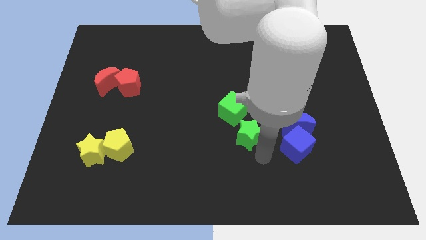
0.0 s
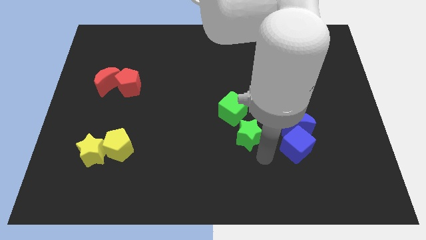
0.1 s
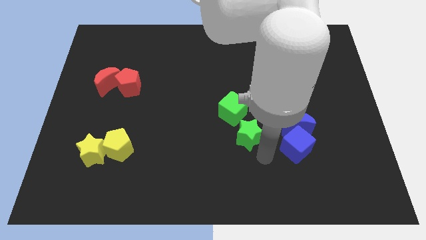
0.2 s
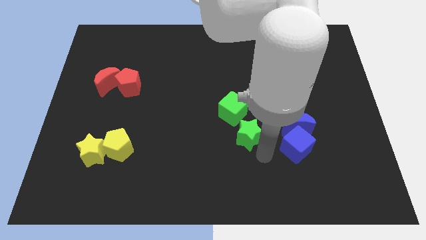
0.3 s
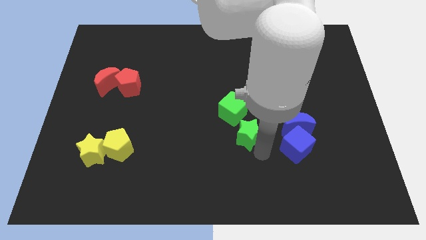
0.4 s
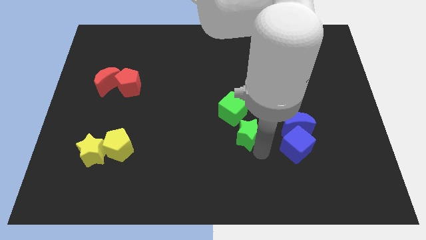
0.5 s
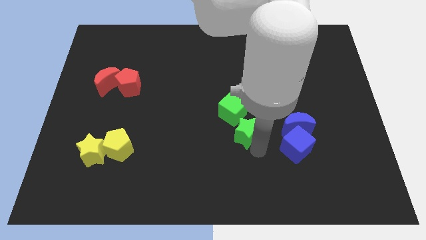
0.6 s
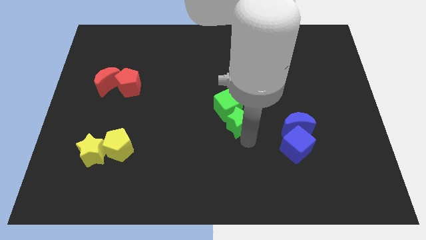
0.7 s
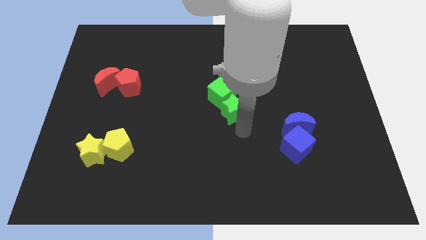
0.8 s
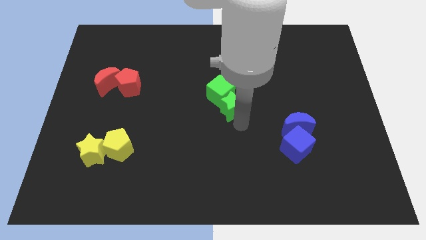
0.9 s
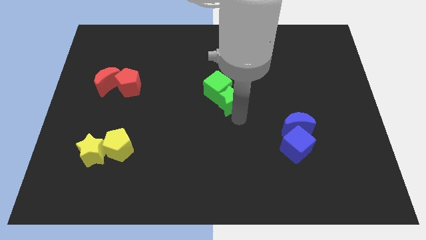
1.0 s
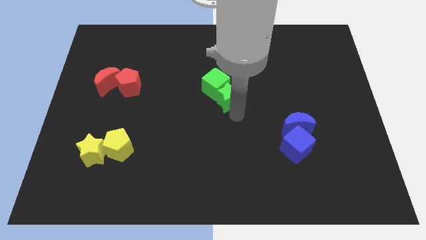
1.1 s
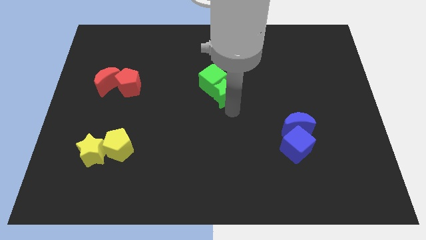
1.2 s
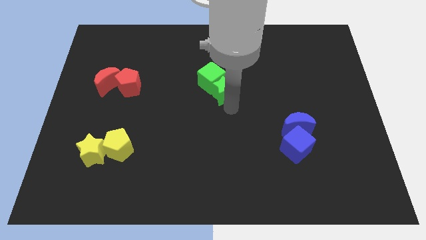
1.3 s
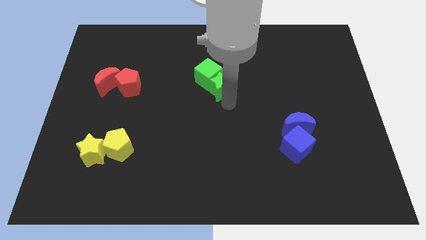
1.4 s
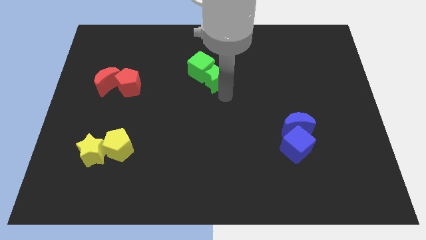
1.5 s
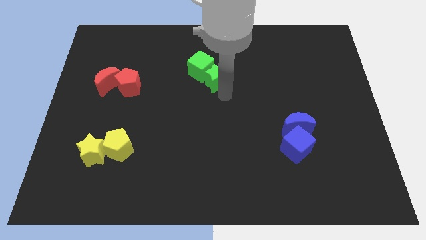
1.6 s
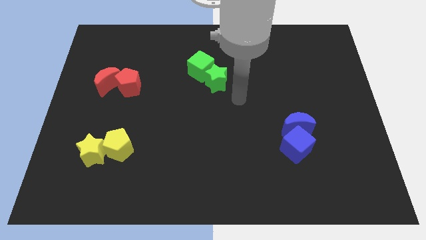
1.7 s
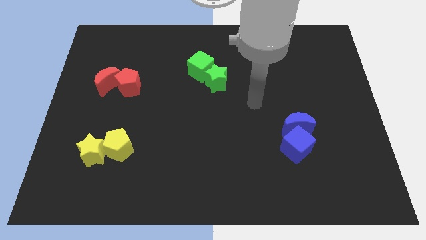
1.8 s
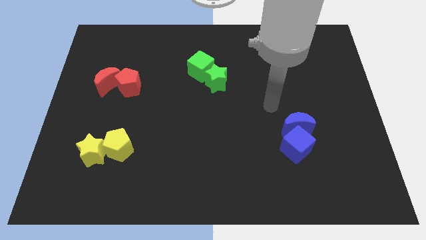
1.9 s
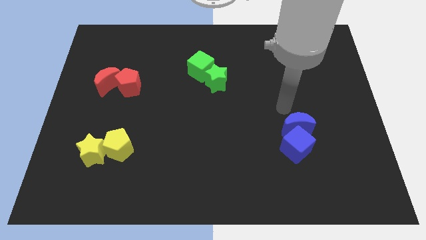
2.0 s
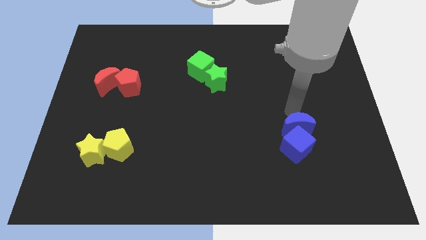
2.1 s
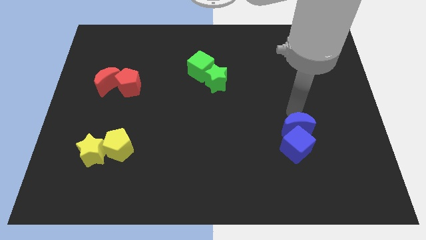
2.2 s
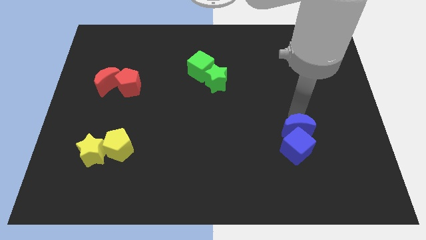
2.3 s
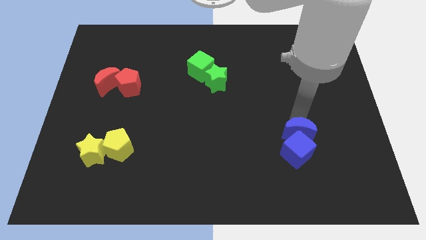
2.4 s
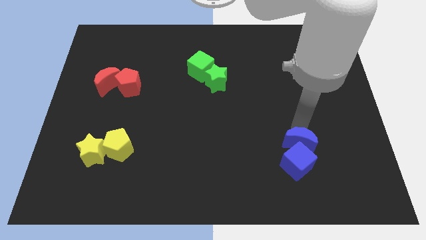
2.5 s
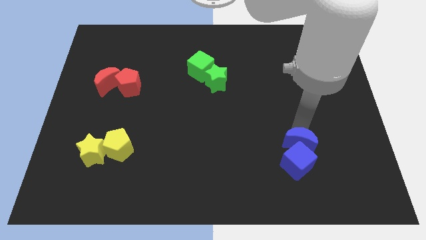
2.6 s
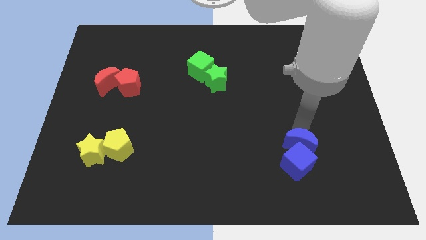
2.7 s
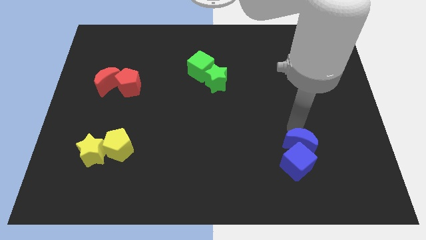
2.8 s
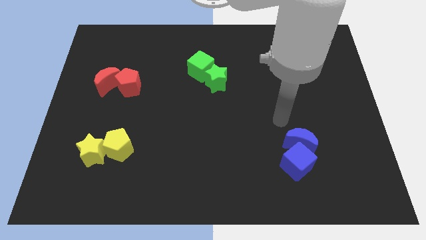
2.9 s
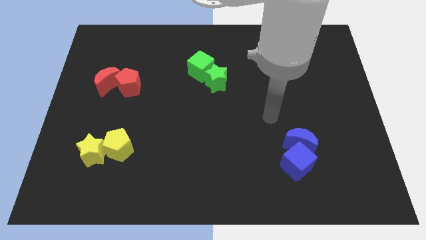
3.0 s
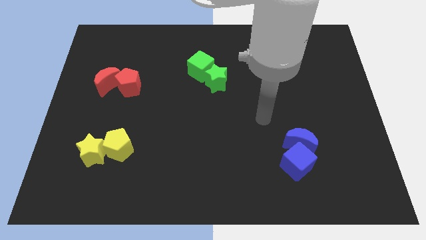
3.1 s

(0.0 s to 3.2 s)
move the green blocks away from the blue blocks

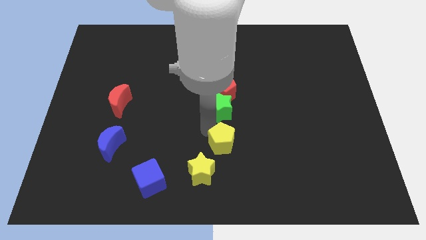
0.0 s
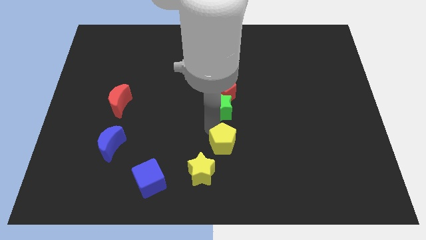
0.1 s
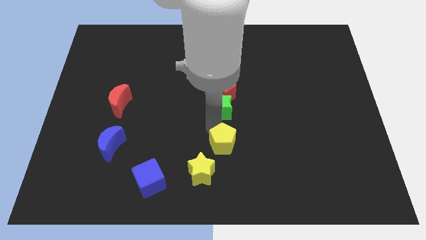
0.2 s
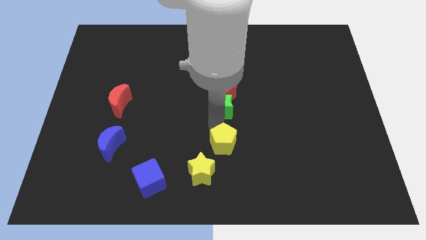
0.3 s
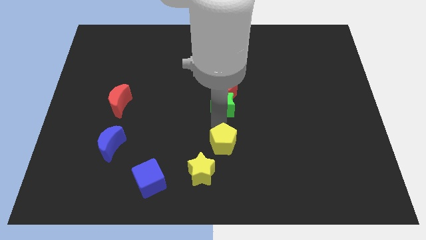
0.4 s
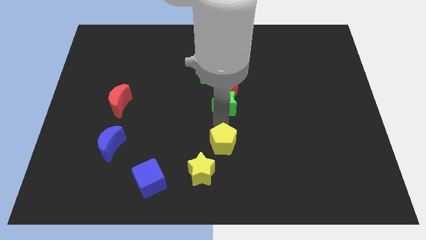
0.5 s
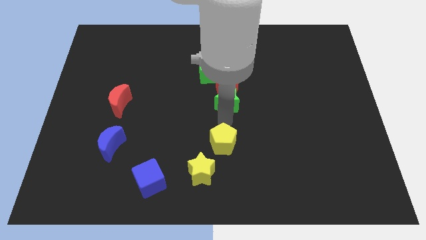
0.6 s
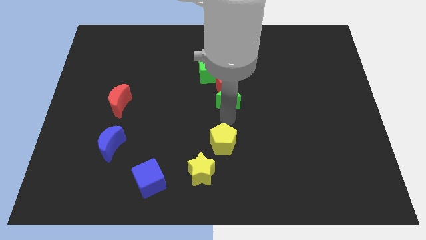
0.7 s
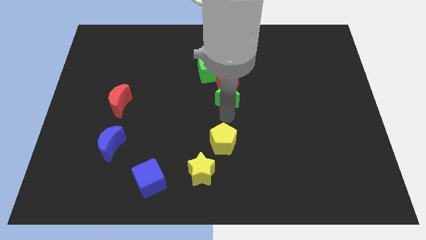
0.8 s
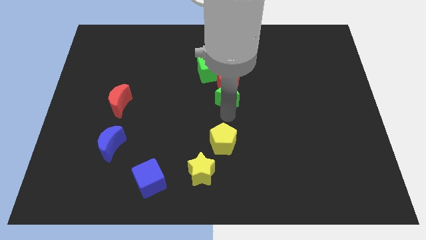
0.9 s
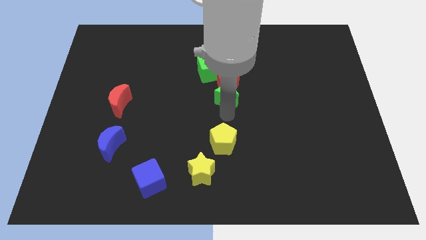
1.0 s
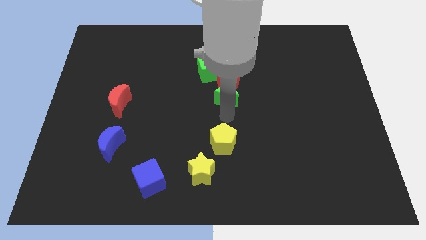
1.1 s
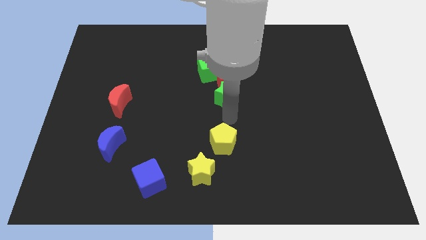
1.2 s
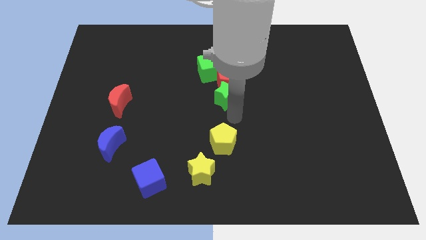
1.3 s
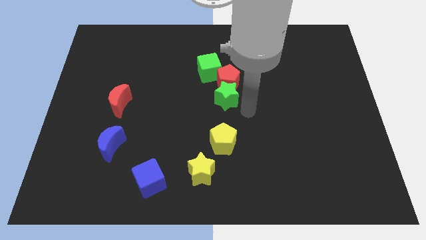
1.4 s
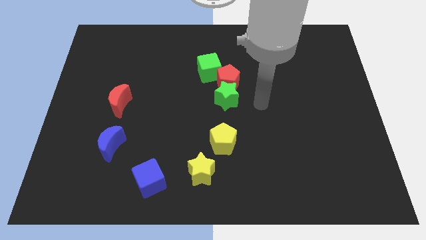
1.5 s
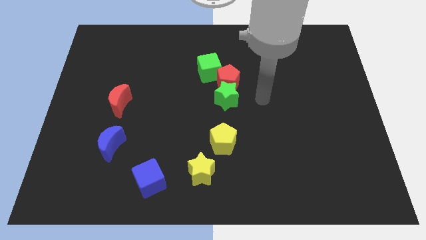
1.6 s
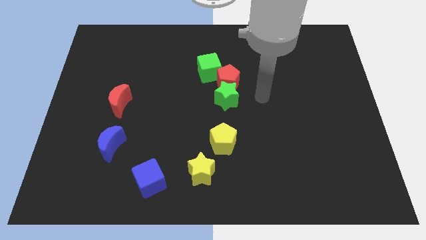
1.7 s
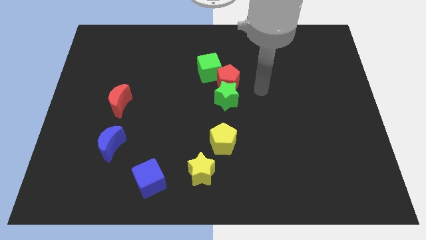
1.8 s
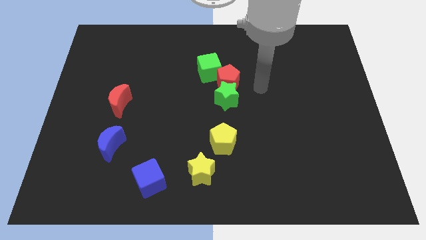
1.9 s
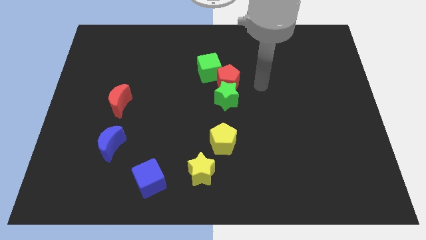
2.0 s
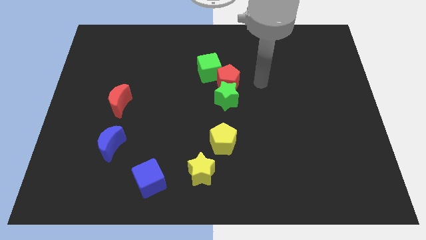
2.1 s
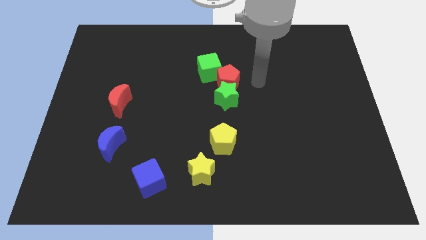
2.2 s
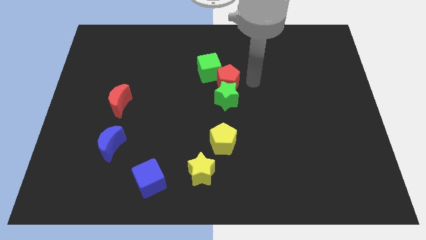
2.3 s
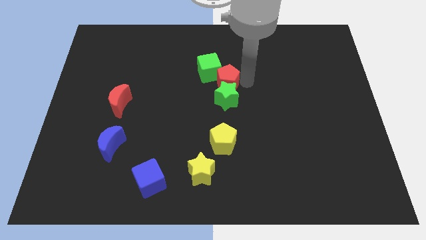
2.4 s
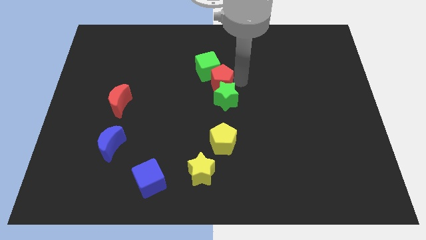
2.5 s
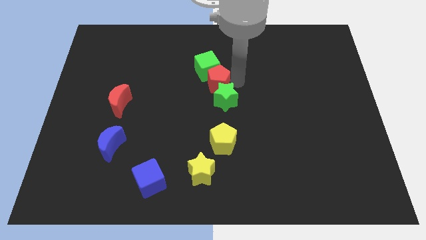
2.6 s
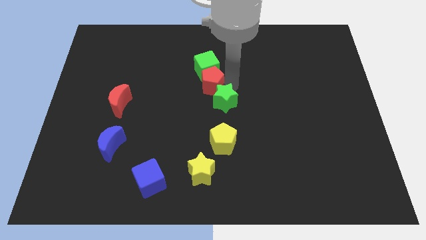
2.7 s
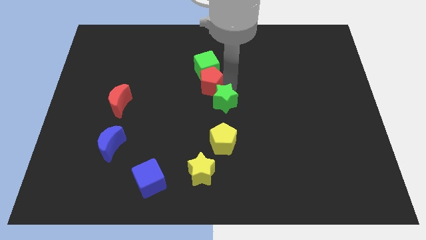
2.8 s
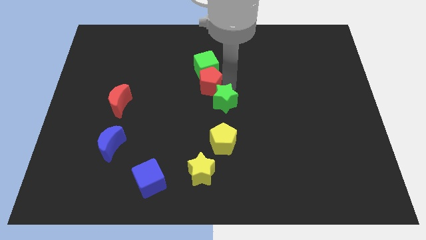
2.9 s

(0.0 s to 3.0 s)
move red pentagon in between green blocks

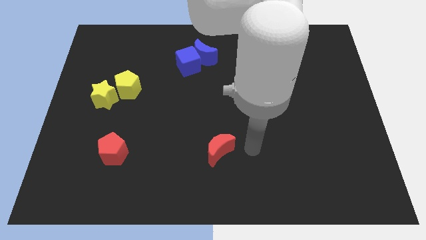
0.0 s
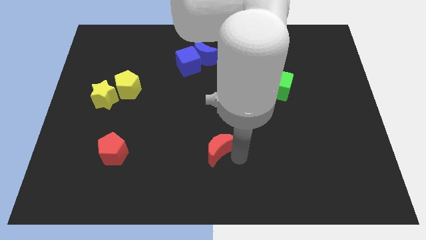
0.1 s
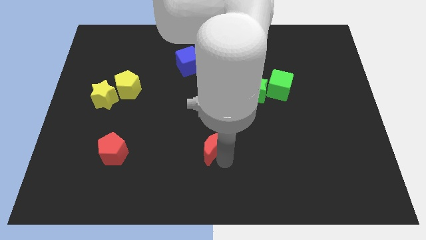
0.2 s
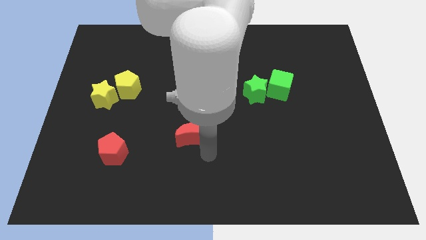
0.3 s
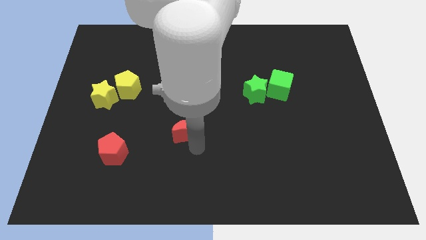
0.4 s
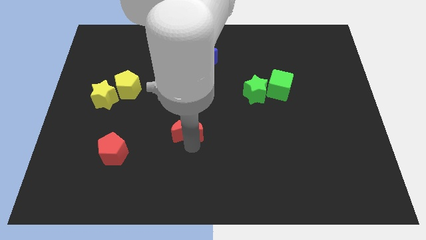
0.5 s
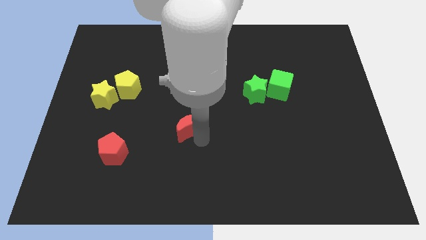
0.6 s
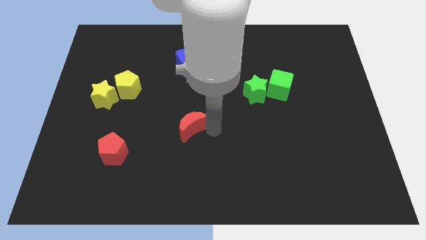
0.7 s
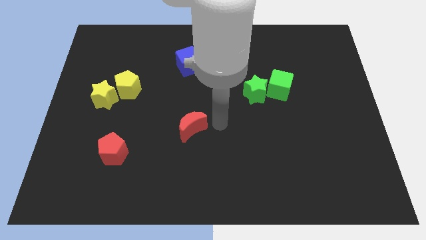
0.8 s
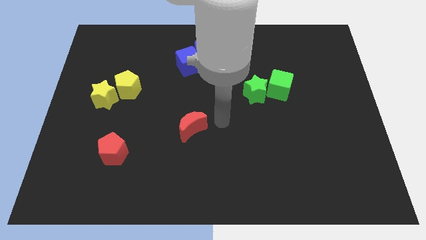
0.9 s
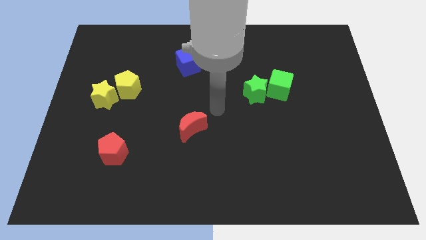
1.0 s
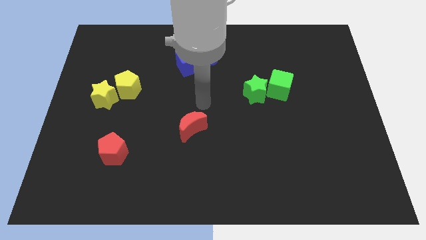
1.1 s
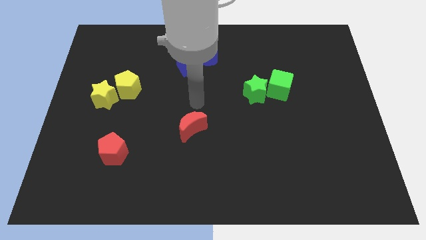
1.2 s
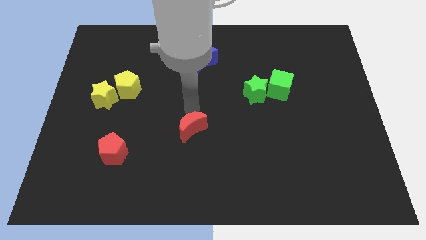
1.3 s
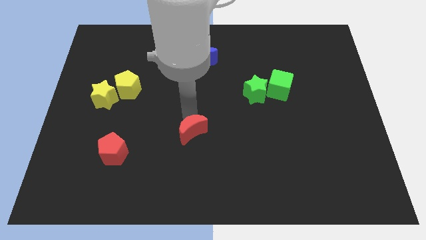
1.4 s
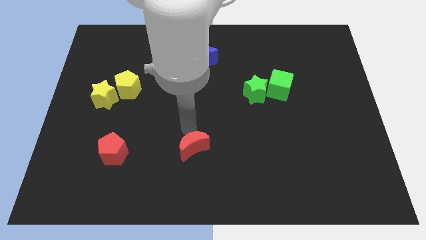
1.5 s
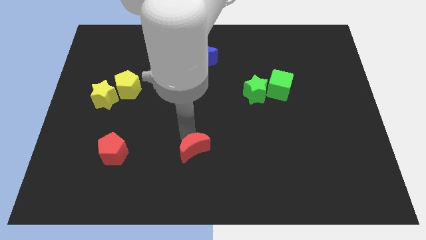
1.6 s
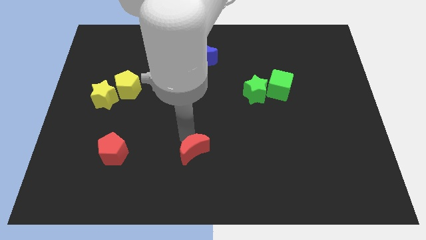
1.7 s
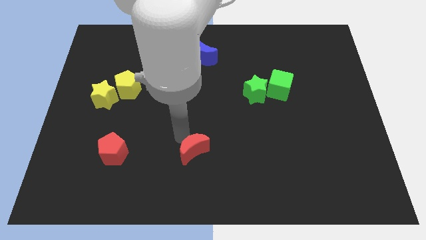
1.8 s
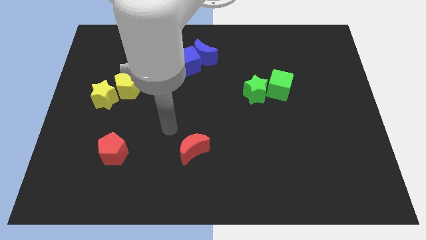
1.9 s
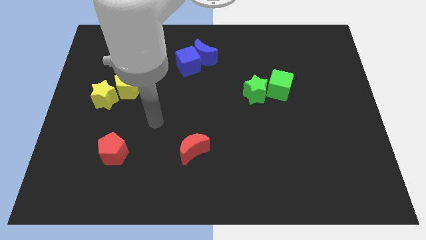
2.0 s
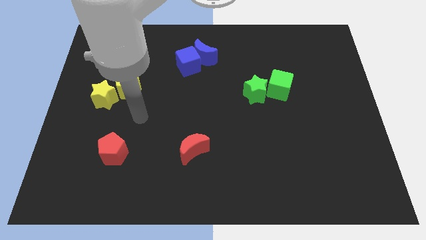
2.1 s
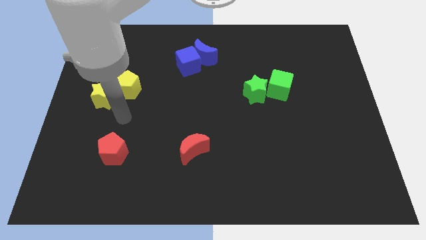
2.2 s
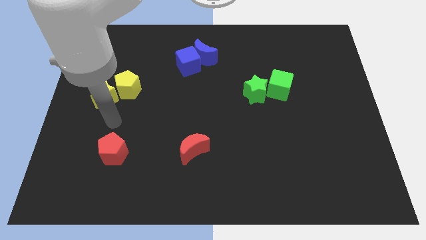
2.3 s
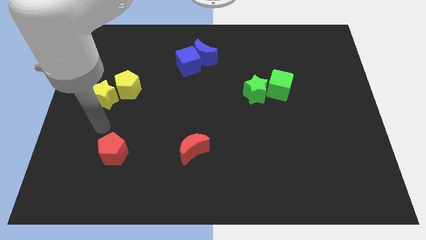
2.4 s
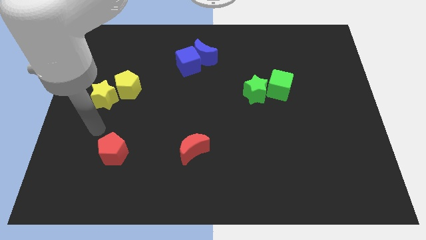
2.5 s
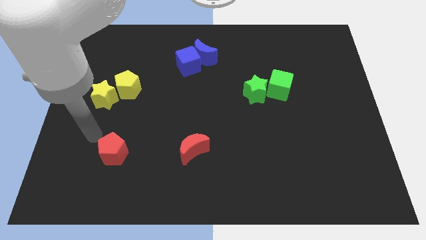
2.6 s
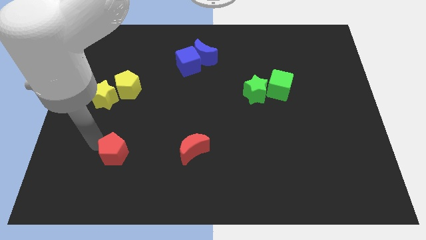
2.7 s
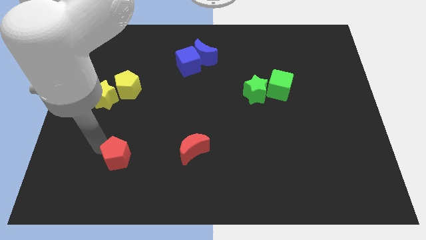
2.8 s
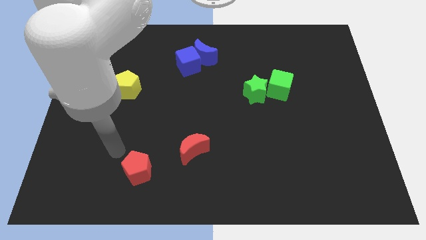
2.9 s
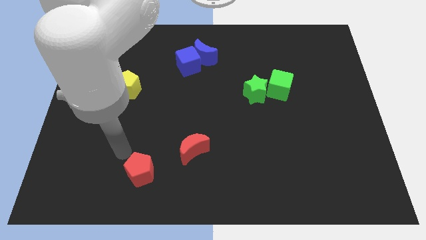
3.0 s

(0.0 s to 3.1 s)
place the red moon diagonally to the left bottom of the green star
